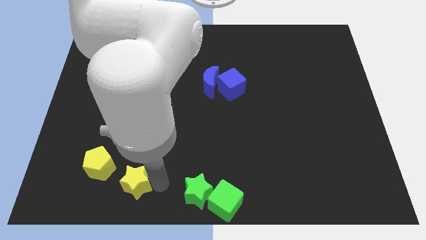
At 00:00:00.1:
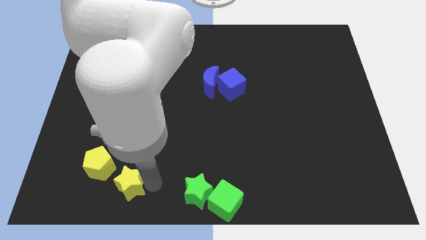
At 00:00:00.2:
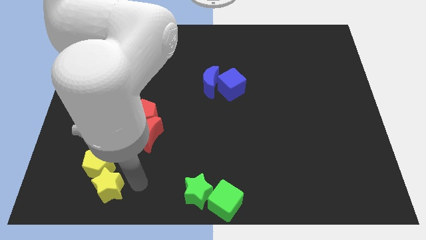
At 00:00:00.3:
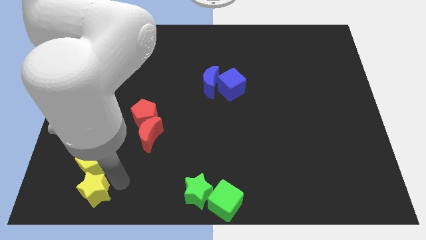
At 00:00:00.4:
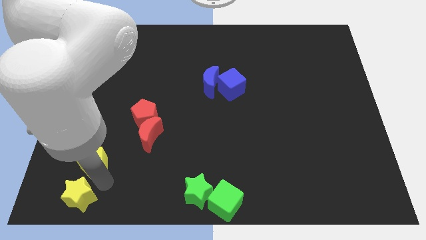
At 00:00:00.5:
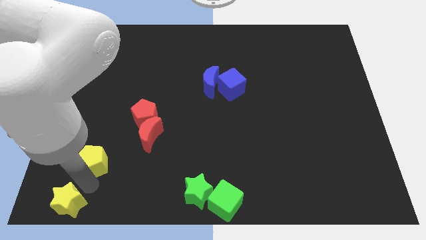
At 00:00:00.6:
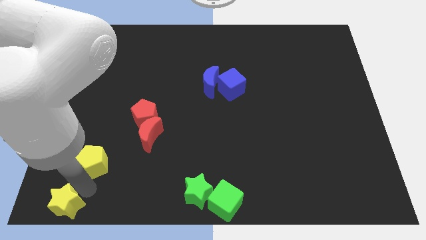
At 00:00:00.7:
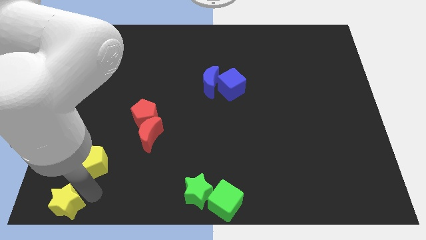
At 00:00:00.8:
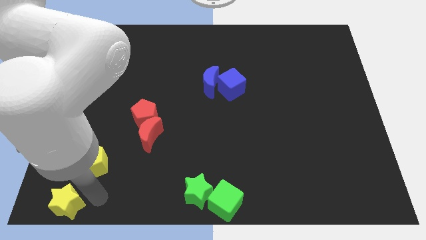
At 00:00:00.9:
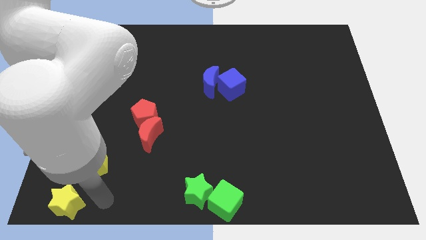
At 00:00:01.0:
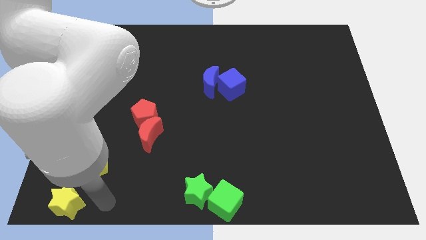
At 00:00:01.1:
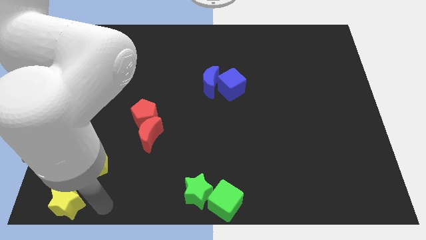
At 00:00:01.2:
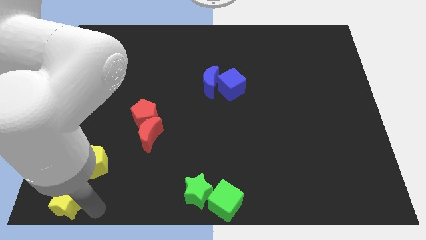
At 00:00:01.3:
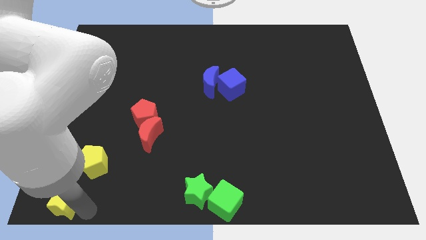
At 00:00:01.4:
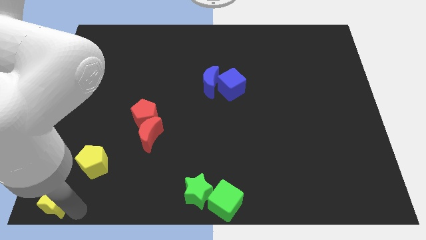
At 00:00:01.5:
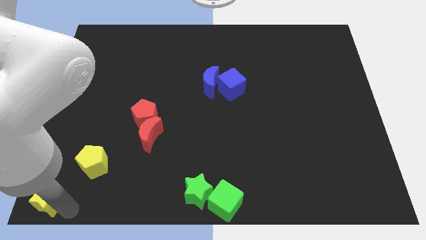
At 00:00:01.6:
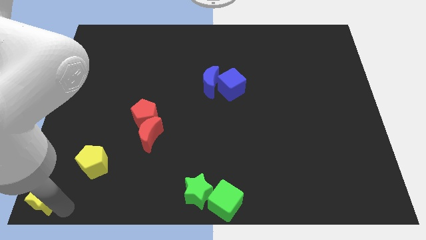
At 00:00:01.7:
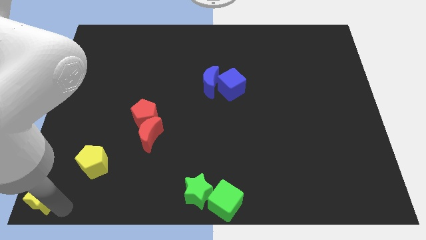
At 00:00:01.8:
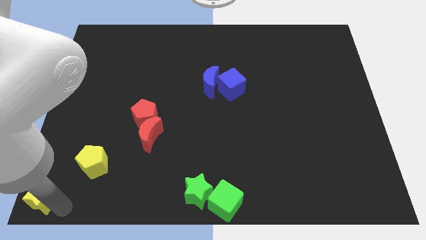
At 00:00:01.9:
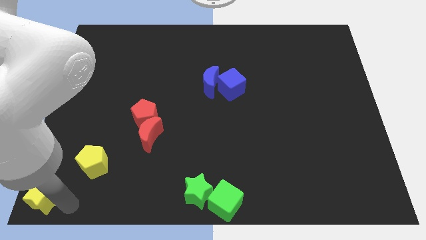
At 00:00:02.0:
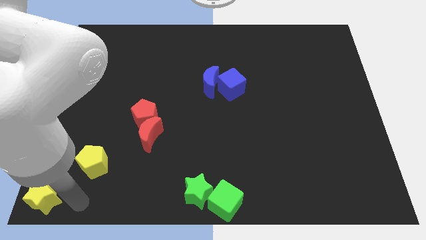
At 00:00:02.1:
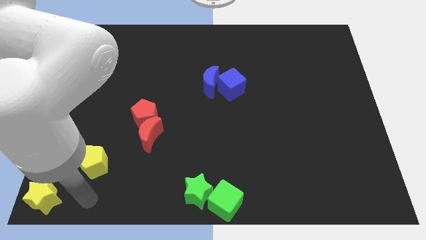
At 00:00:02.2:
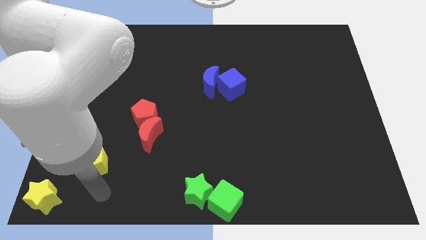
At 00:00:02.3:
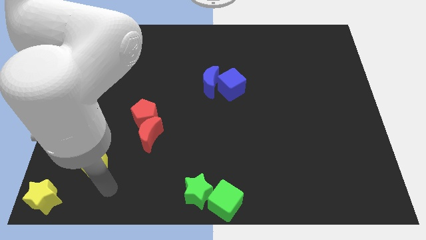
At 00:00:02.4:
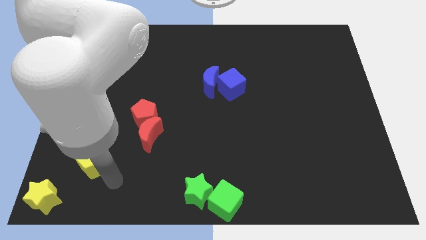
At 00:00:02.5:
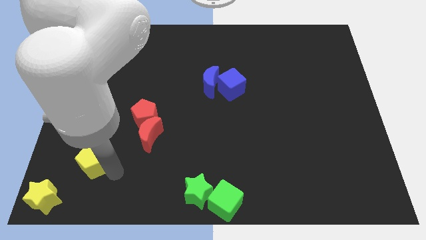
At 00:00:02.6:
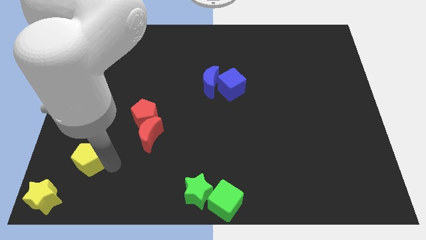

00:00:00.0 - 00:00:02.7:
place yellow star to the bottom left corner of the board

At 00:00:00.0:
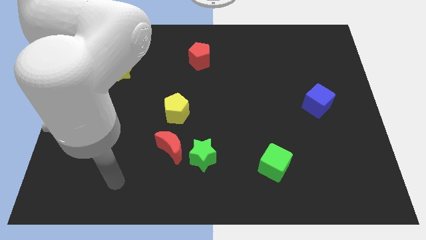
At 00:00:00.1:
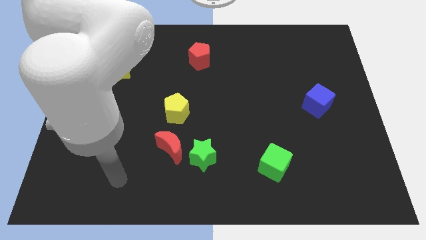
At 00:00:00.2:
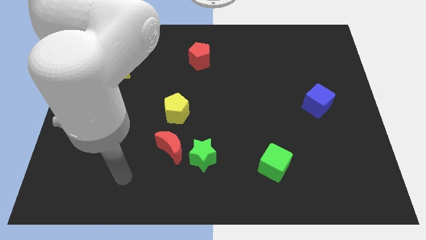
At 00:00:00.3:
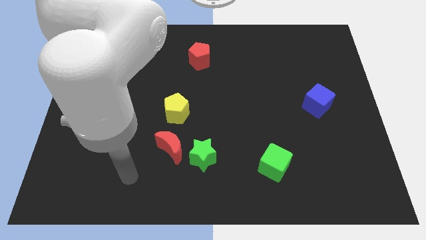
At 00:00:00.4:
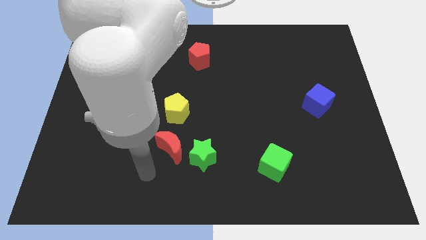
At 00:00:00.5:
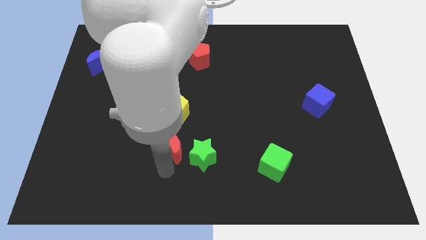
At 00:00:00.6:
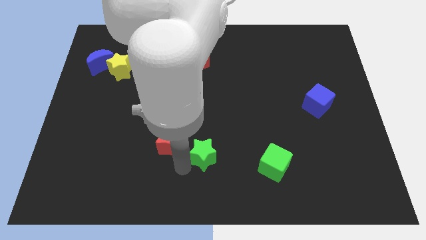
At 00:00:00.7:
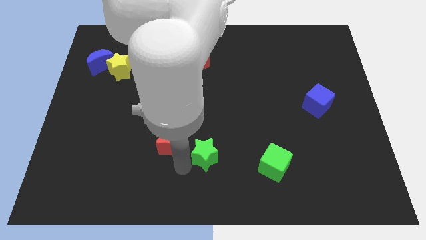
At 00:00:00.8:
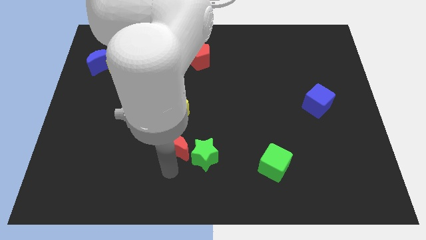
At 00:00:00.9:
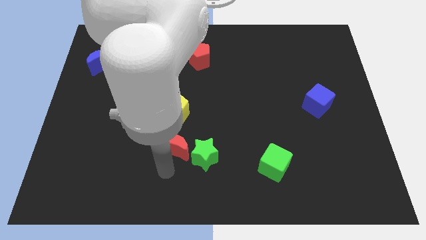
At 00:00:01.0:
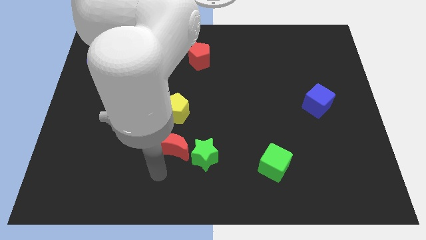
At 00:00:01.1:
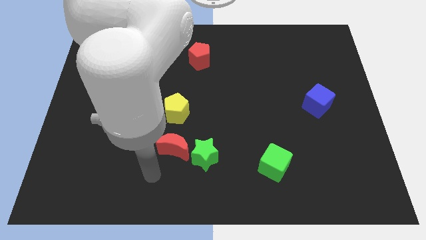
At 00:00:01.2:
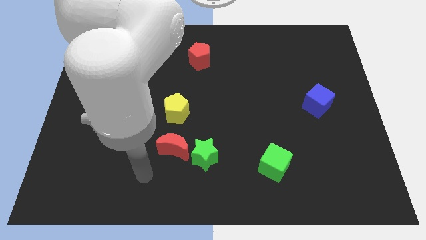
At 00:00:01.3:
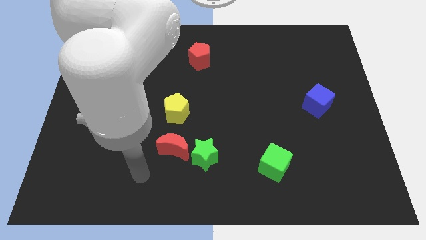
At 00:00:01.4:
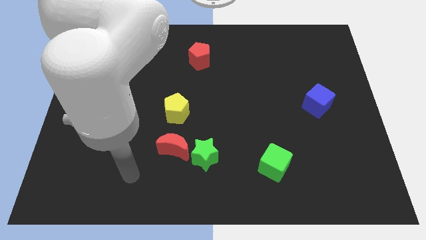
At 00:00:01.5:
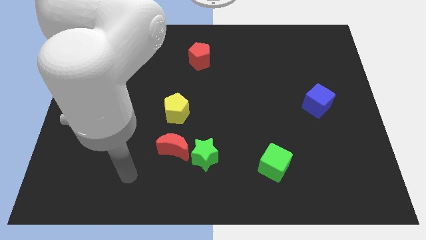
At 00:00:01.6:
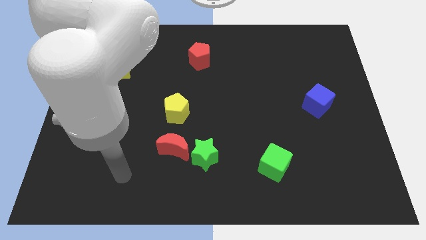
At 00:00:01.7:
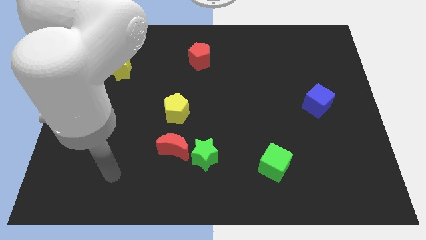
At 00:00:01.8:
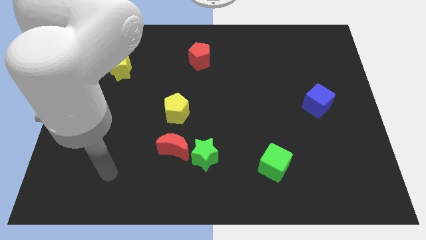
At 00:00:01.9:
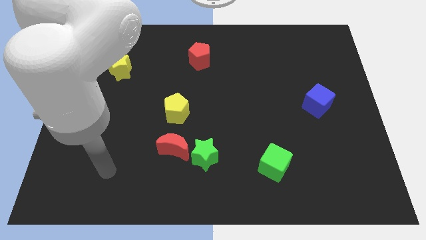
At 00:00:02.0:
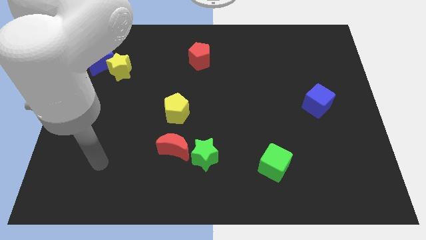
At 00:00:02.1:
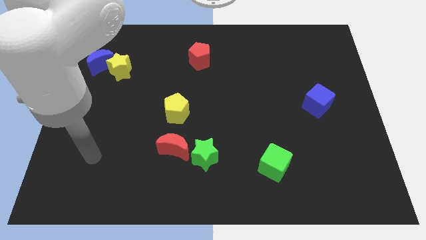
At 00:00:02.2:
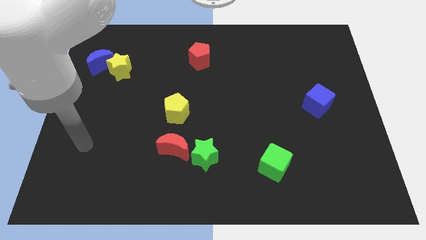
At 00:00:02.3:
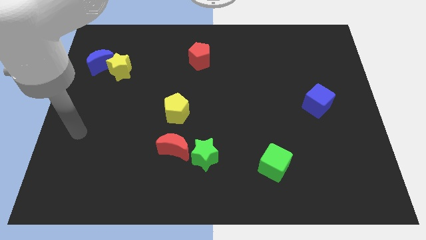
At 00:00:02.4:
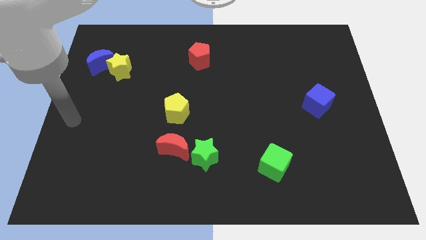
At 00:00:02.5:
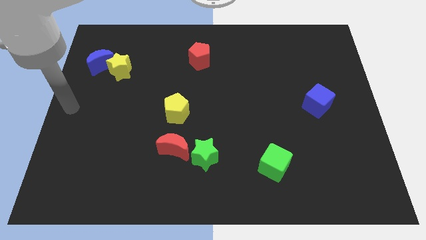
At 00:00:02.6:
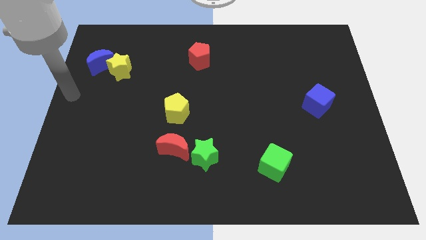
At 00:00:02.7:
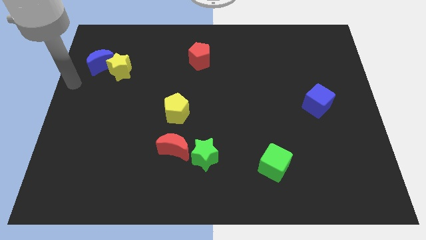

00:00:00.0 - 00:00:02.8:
move your arm away from the red crescent

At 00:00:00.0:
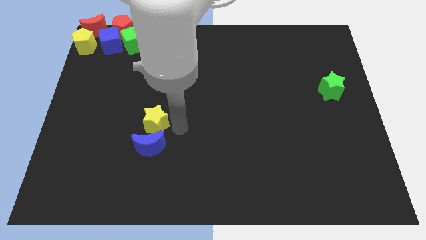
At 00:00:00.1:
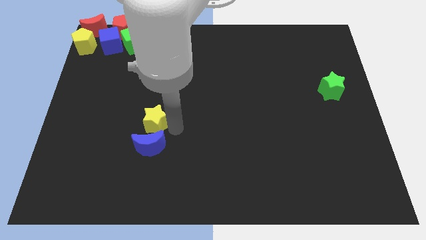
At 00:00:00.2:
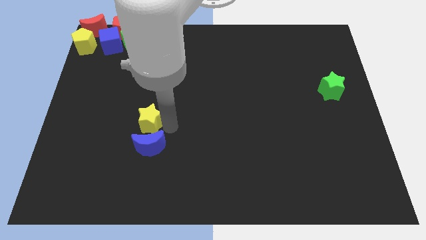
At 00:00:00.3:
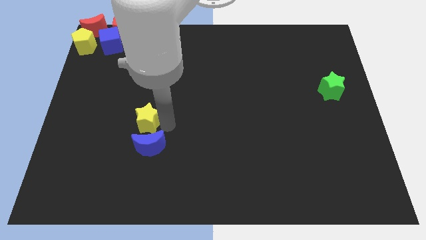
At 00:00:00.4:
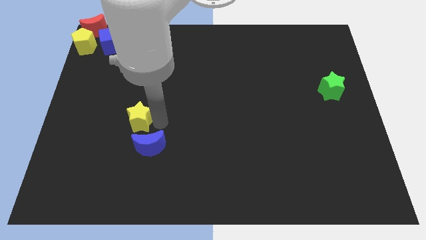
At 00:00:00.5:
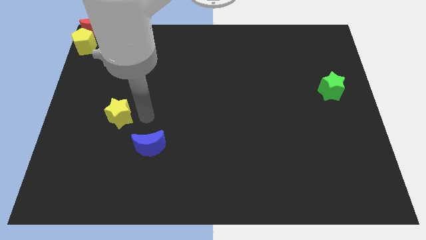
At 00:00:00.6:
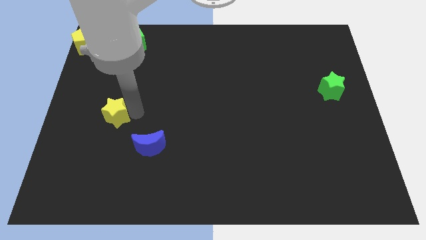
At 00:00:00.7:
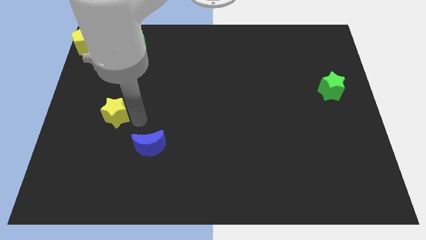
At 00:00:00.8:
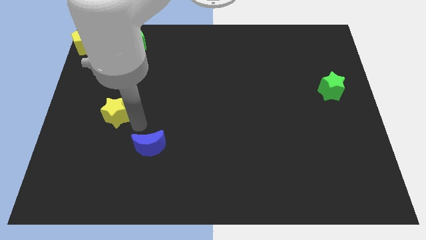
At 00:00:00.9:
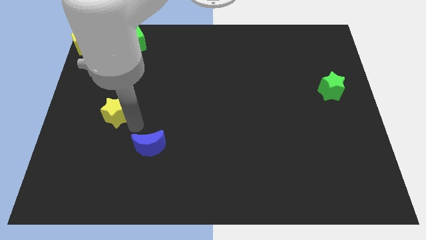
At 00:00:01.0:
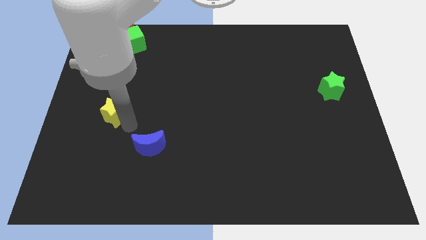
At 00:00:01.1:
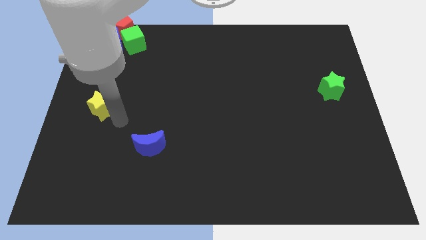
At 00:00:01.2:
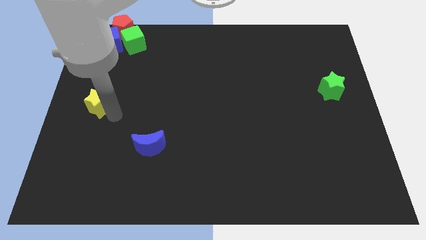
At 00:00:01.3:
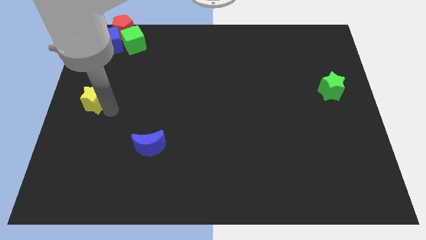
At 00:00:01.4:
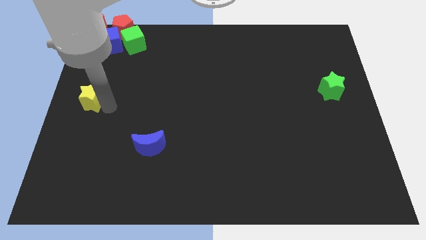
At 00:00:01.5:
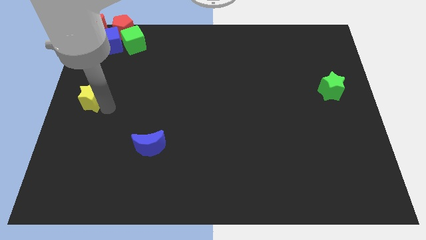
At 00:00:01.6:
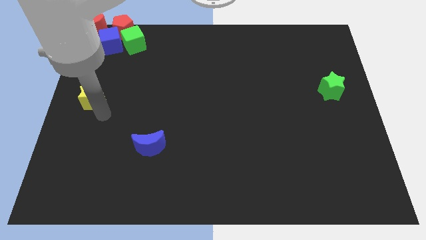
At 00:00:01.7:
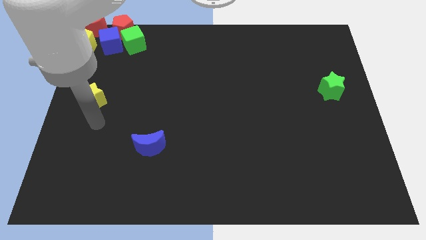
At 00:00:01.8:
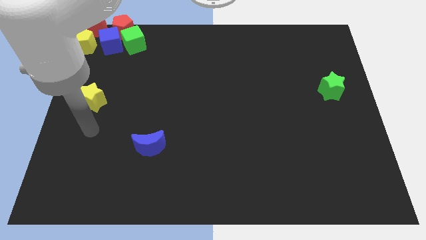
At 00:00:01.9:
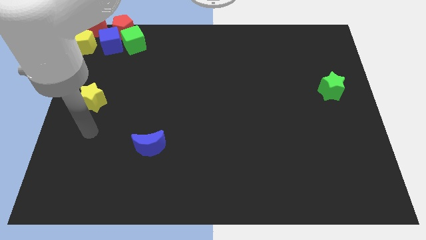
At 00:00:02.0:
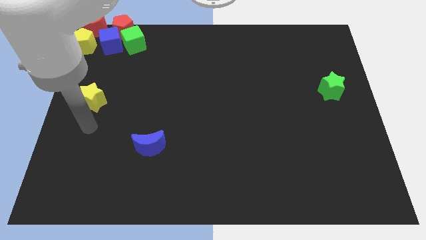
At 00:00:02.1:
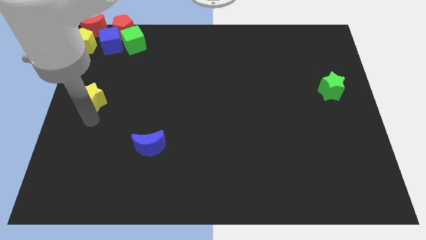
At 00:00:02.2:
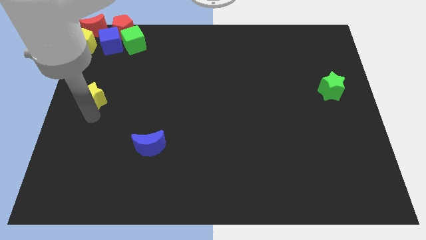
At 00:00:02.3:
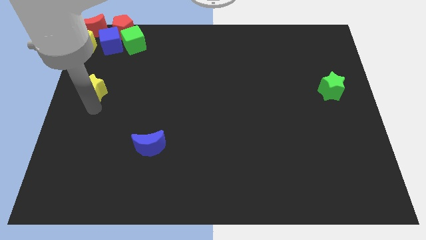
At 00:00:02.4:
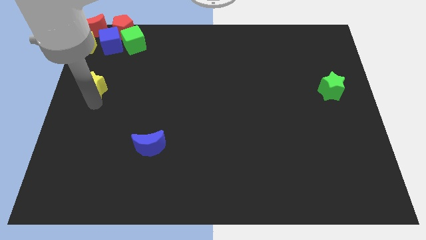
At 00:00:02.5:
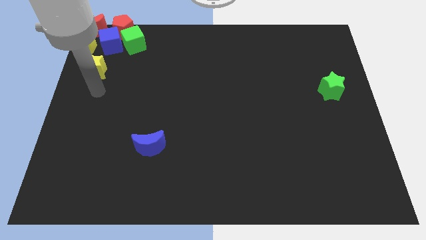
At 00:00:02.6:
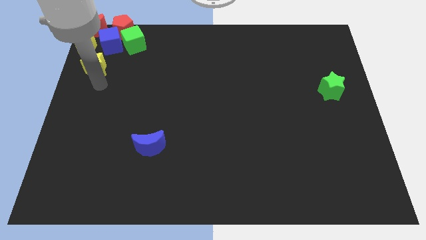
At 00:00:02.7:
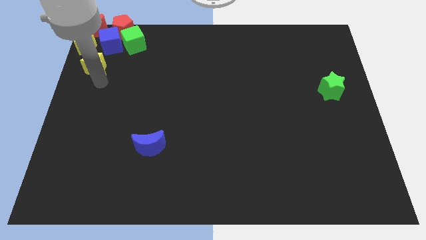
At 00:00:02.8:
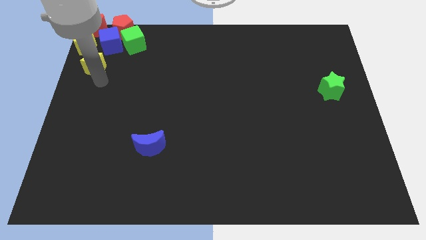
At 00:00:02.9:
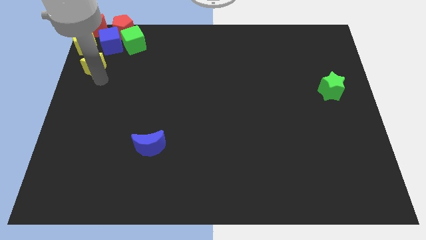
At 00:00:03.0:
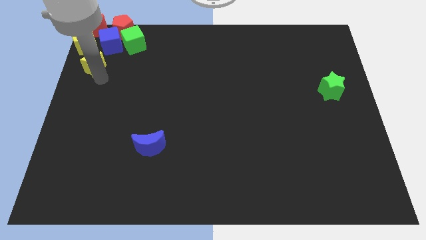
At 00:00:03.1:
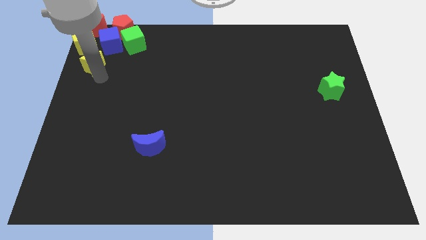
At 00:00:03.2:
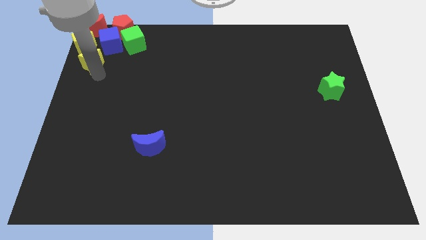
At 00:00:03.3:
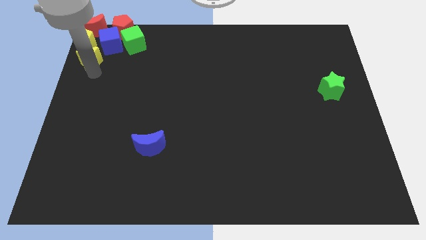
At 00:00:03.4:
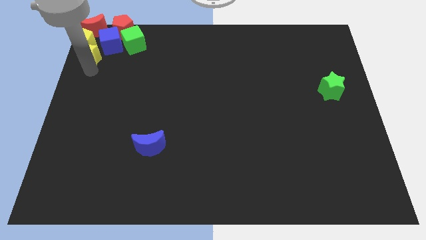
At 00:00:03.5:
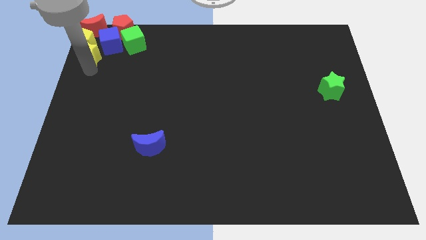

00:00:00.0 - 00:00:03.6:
move the yellow star to the down of yellow pentagon
